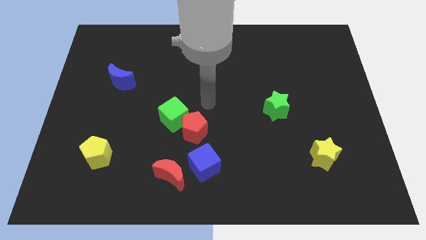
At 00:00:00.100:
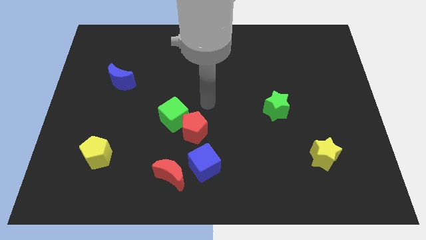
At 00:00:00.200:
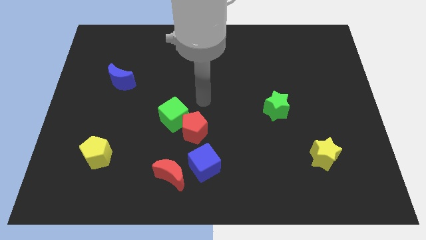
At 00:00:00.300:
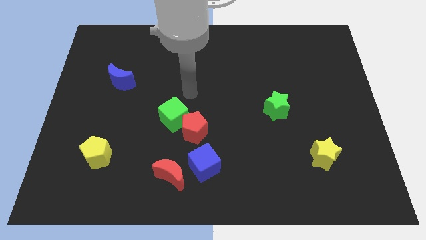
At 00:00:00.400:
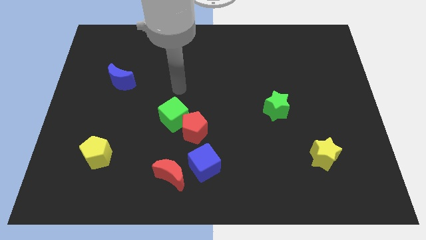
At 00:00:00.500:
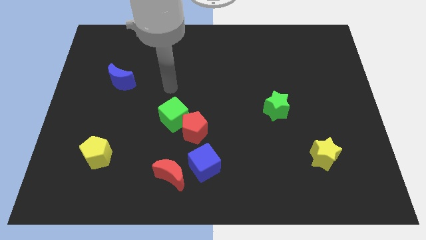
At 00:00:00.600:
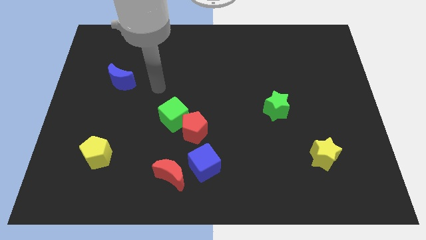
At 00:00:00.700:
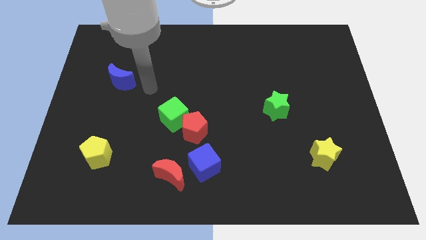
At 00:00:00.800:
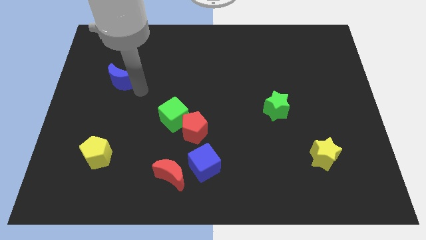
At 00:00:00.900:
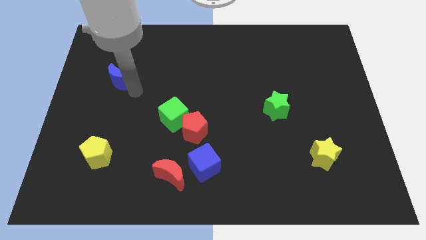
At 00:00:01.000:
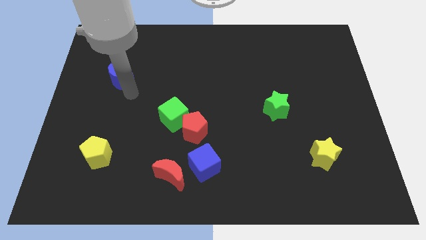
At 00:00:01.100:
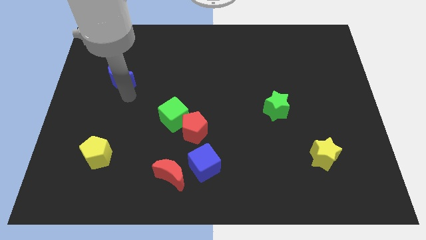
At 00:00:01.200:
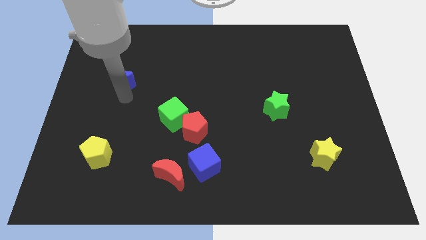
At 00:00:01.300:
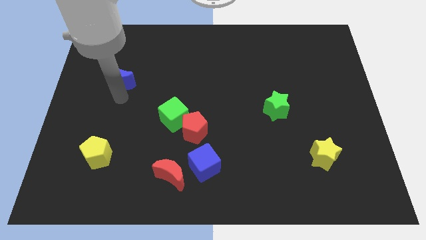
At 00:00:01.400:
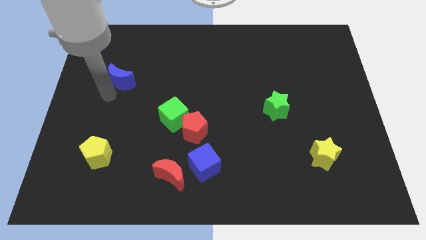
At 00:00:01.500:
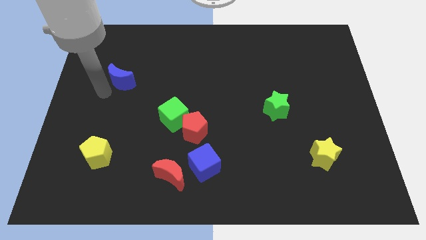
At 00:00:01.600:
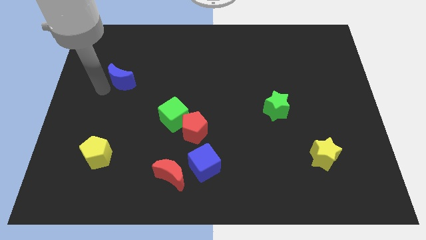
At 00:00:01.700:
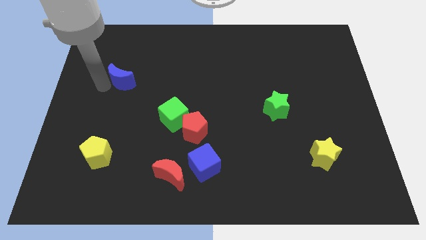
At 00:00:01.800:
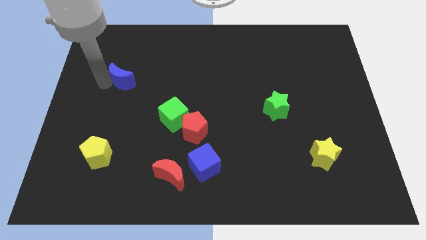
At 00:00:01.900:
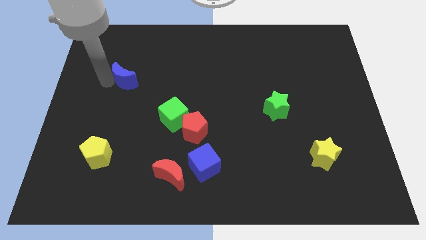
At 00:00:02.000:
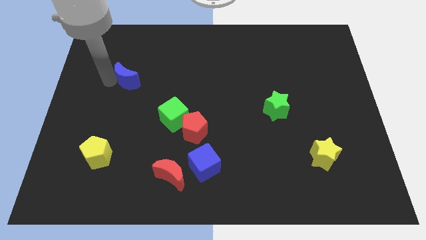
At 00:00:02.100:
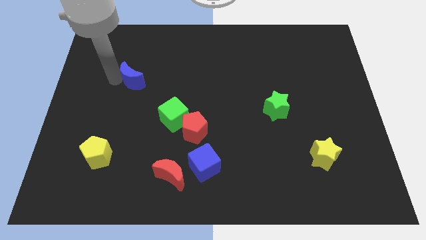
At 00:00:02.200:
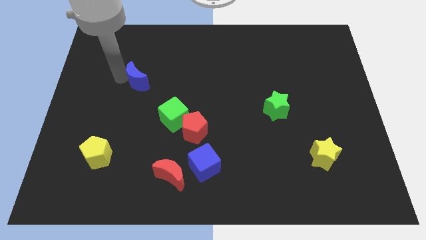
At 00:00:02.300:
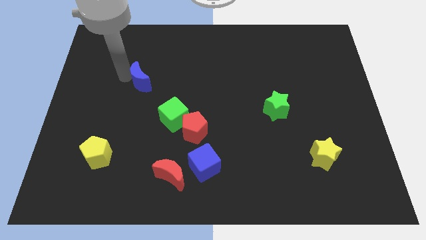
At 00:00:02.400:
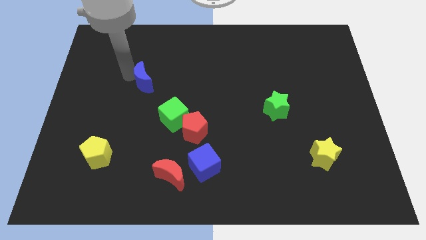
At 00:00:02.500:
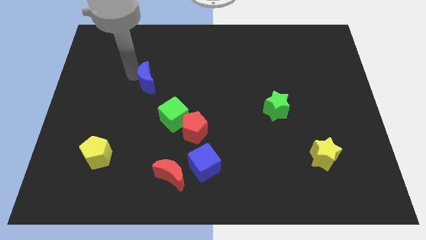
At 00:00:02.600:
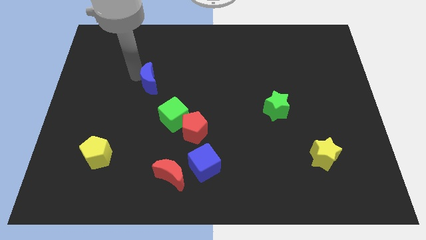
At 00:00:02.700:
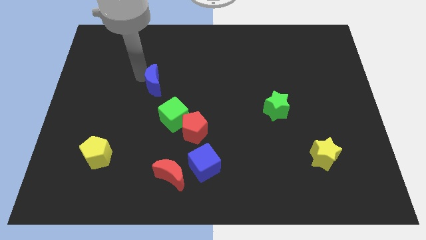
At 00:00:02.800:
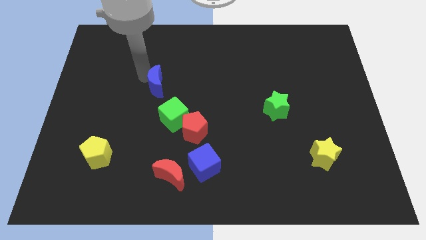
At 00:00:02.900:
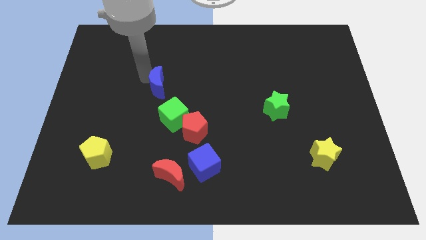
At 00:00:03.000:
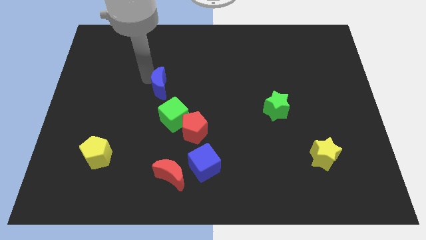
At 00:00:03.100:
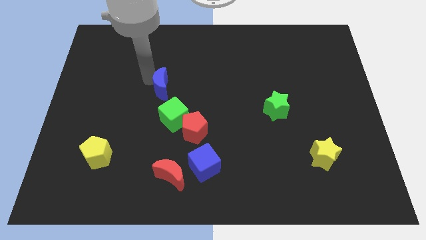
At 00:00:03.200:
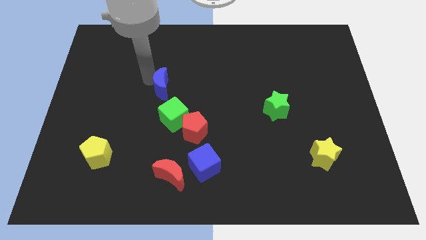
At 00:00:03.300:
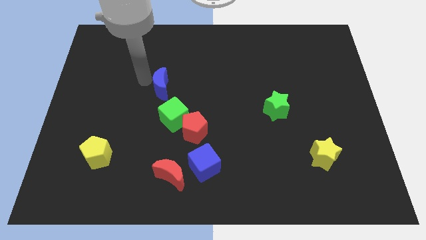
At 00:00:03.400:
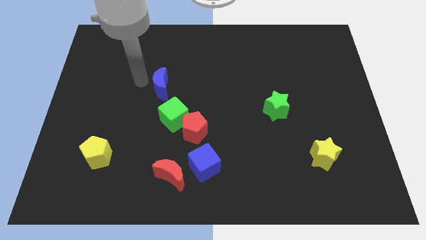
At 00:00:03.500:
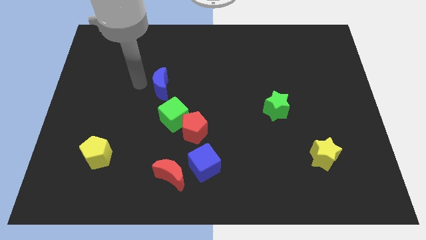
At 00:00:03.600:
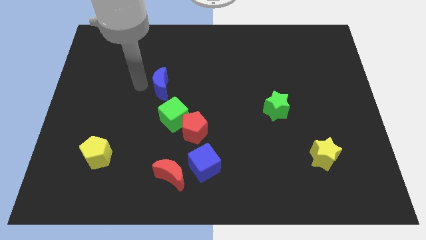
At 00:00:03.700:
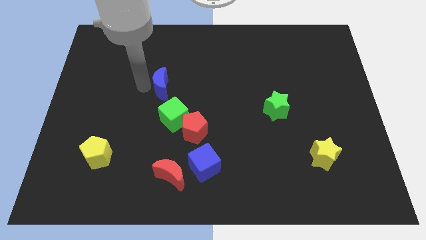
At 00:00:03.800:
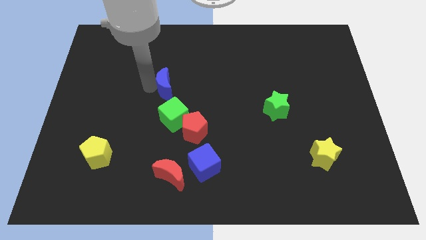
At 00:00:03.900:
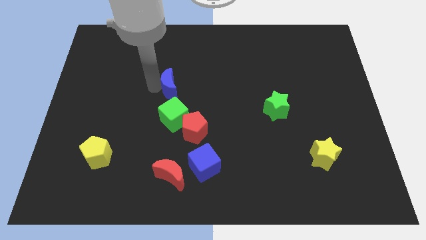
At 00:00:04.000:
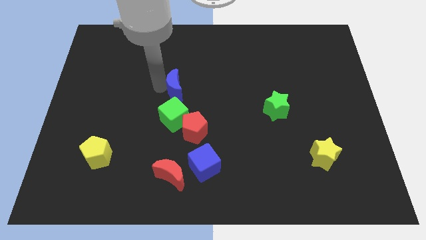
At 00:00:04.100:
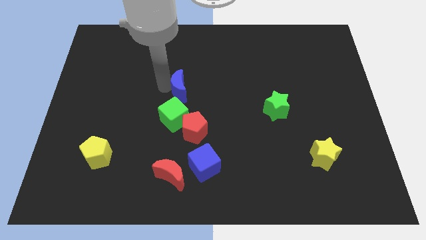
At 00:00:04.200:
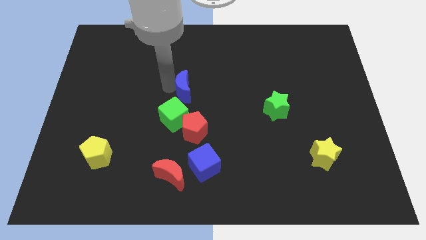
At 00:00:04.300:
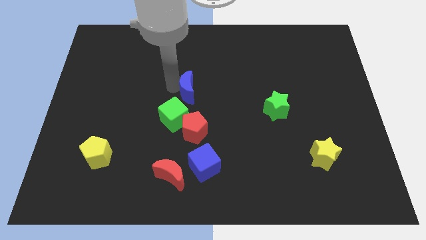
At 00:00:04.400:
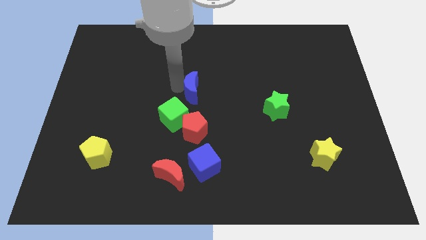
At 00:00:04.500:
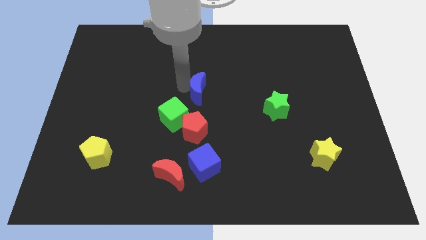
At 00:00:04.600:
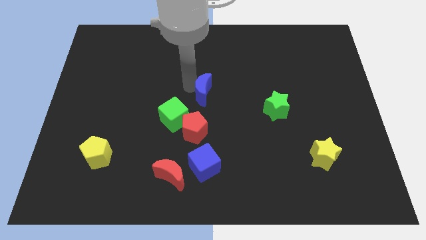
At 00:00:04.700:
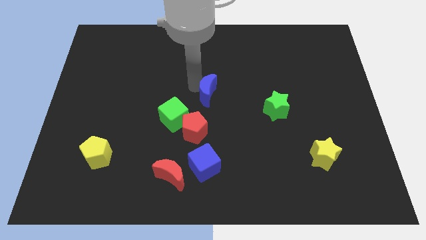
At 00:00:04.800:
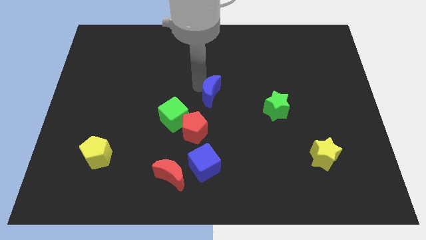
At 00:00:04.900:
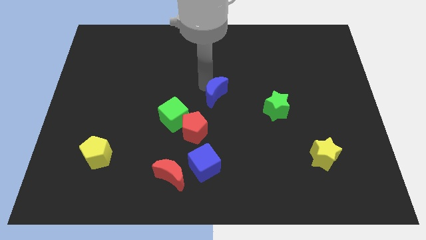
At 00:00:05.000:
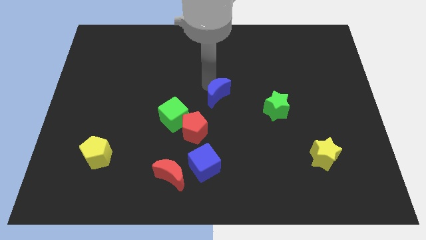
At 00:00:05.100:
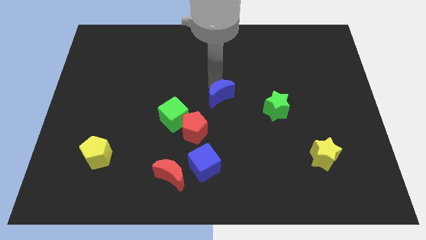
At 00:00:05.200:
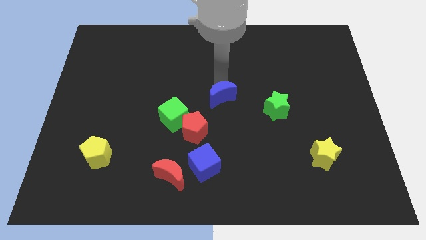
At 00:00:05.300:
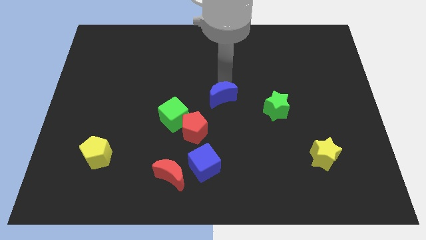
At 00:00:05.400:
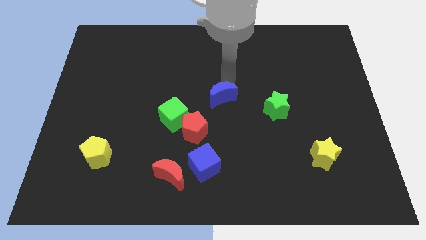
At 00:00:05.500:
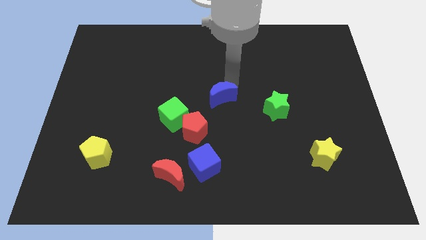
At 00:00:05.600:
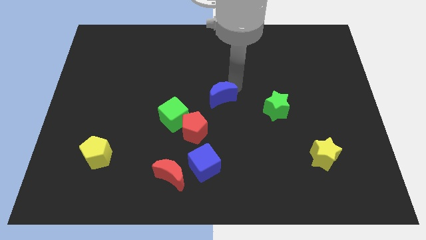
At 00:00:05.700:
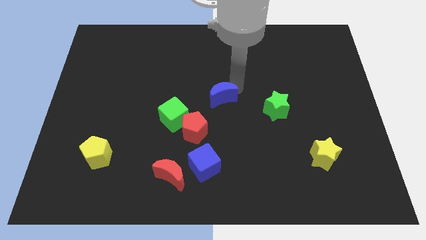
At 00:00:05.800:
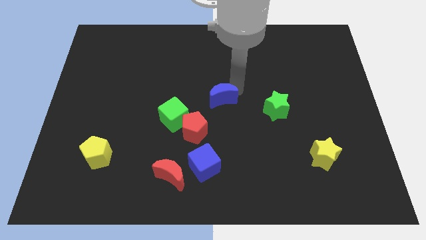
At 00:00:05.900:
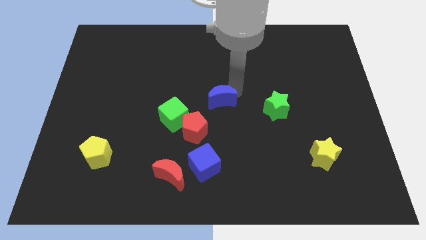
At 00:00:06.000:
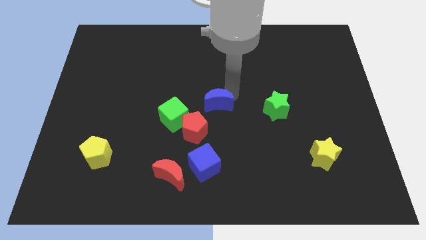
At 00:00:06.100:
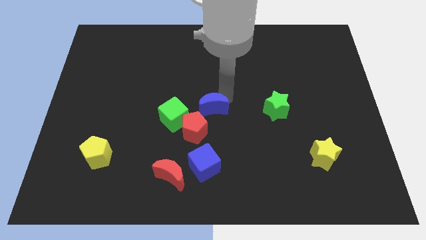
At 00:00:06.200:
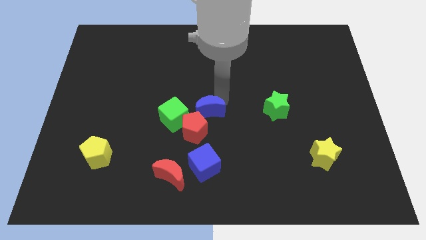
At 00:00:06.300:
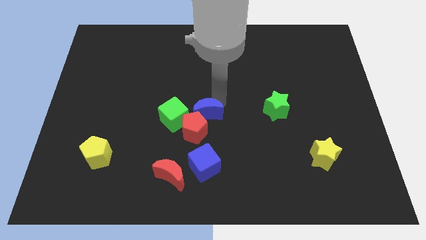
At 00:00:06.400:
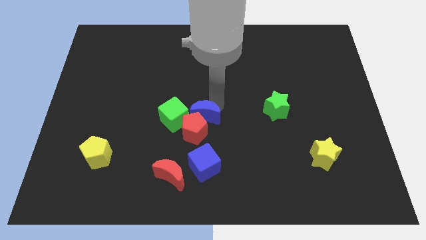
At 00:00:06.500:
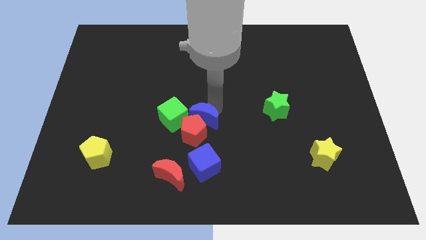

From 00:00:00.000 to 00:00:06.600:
put the blue moon close to the red pentagon

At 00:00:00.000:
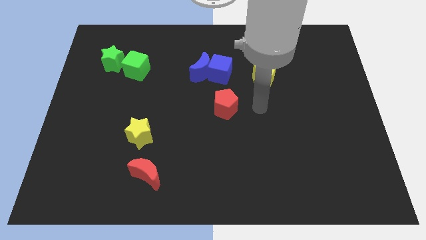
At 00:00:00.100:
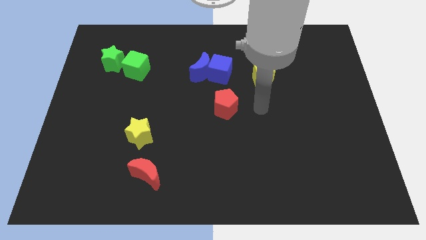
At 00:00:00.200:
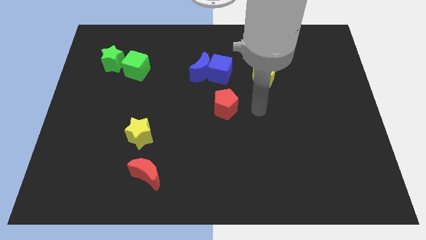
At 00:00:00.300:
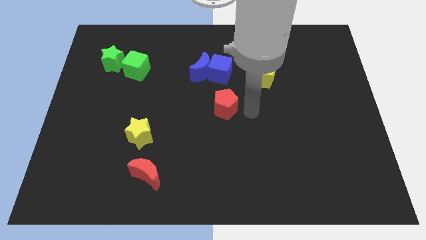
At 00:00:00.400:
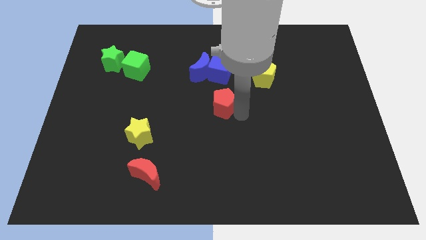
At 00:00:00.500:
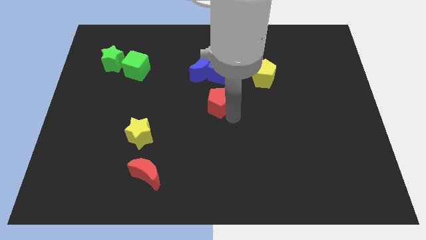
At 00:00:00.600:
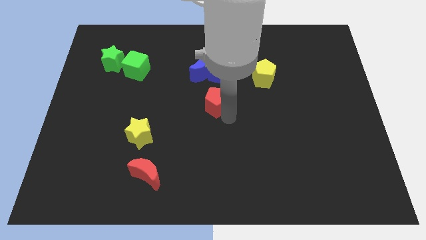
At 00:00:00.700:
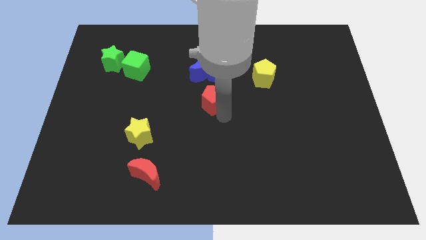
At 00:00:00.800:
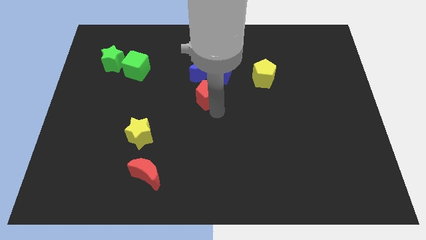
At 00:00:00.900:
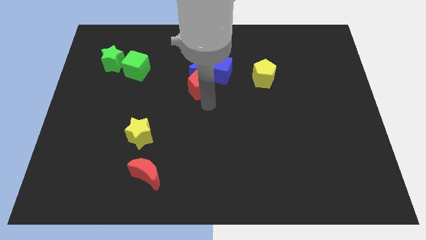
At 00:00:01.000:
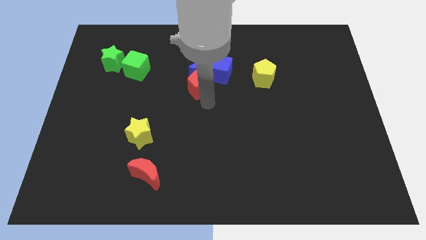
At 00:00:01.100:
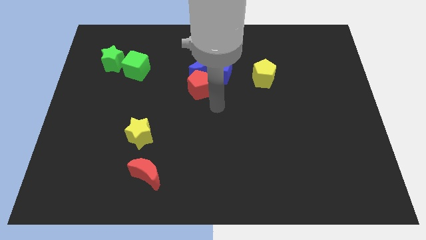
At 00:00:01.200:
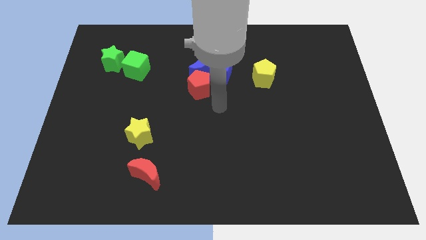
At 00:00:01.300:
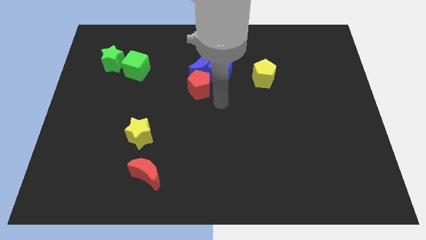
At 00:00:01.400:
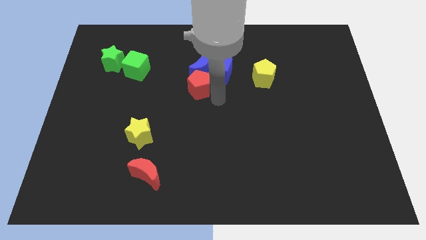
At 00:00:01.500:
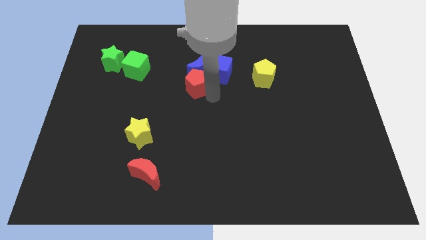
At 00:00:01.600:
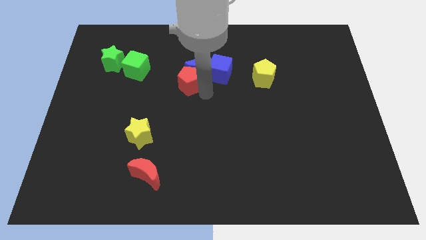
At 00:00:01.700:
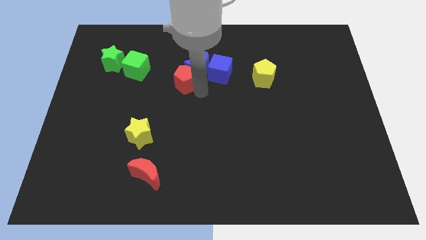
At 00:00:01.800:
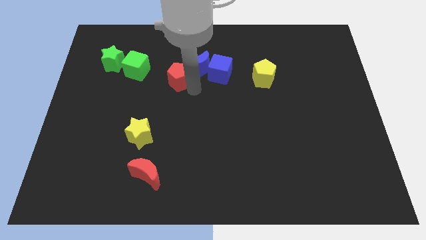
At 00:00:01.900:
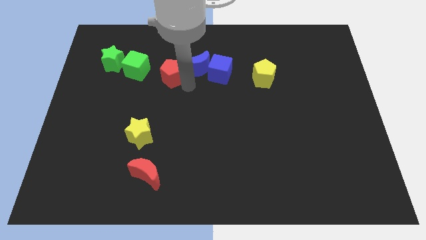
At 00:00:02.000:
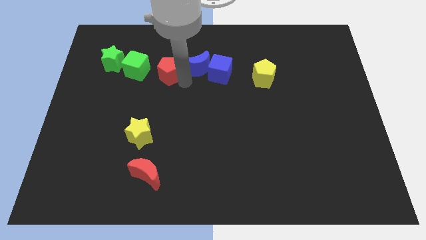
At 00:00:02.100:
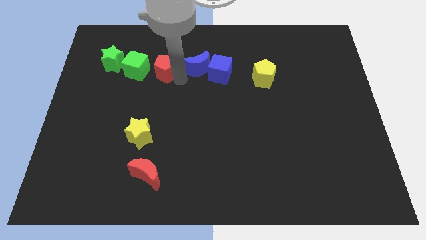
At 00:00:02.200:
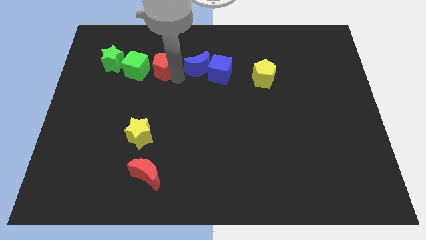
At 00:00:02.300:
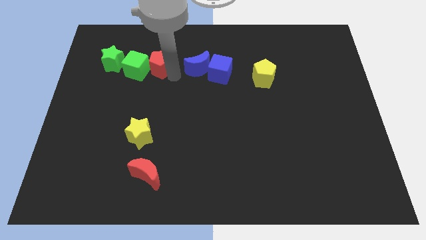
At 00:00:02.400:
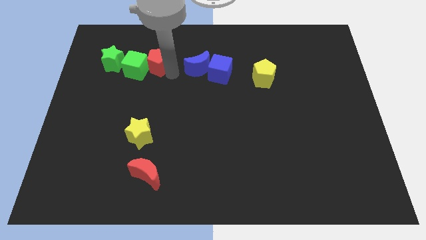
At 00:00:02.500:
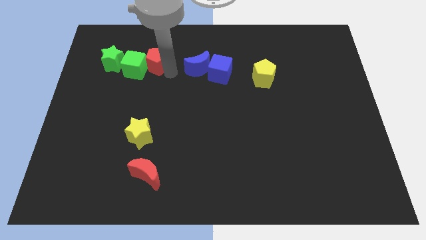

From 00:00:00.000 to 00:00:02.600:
push the red pentagon towards the green cube
